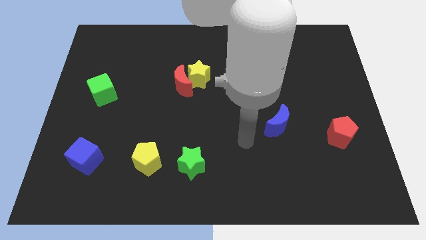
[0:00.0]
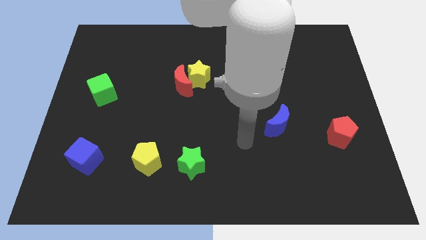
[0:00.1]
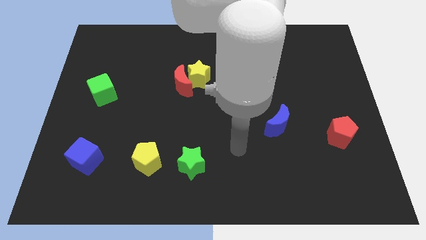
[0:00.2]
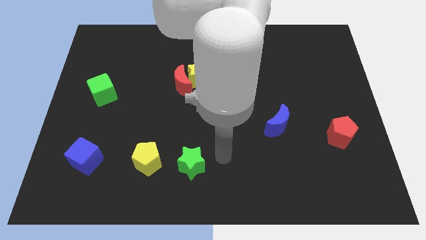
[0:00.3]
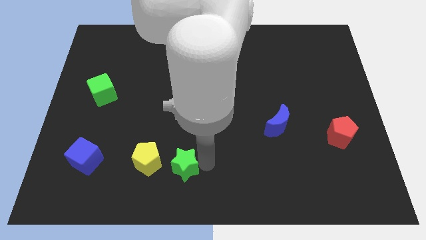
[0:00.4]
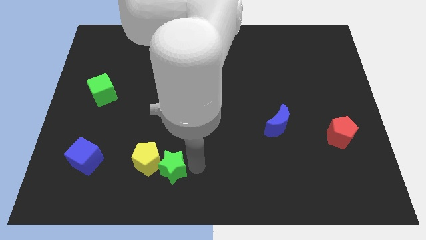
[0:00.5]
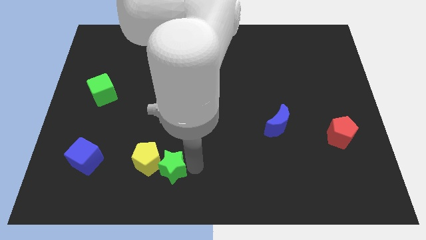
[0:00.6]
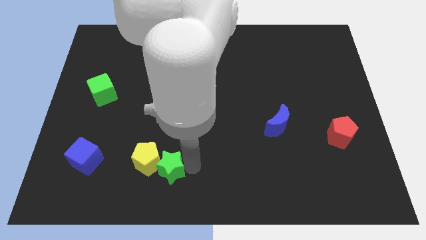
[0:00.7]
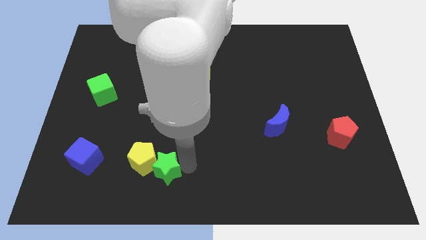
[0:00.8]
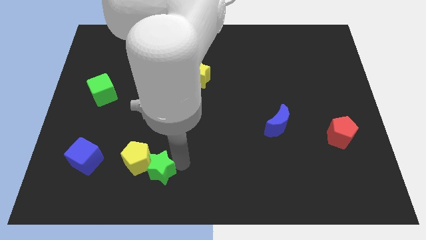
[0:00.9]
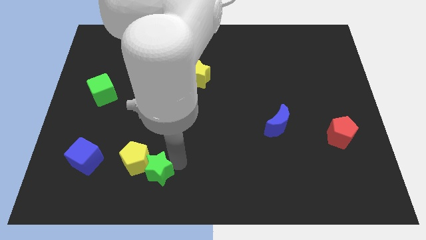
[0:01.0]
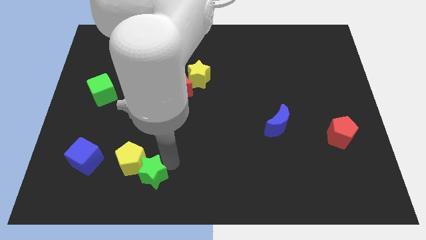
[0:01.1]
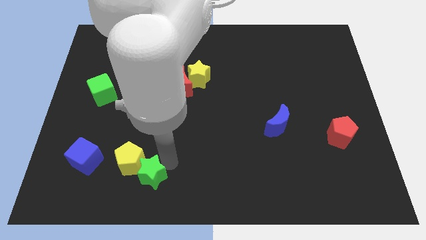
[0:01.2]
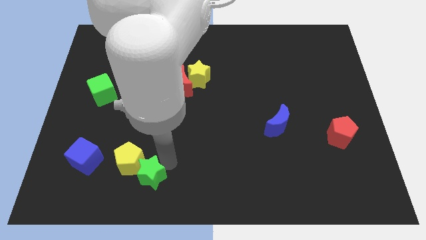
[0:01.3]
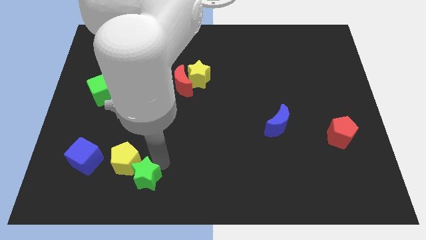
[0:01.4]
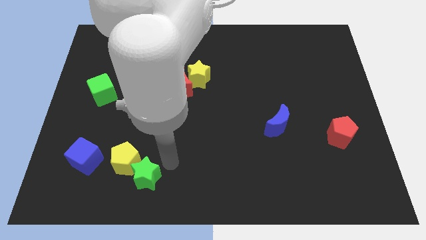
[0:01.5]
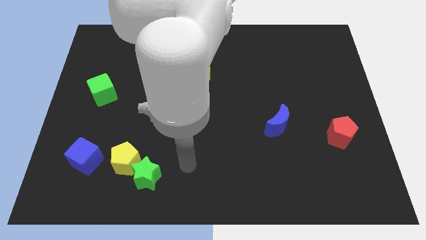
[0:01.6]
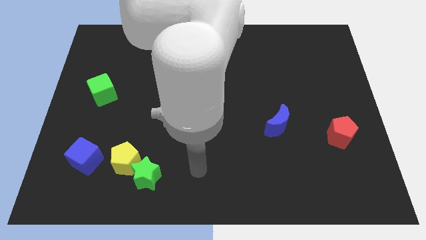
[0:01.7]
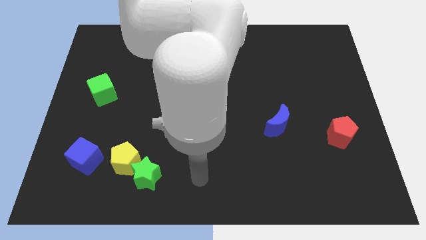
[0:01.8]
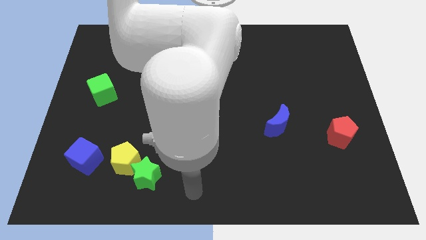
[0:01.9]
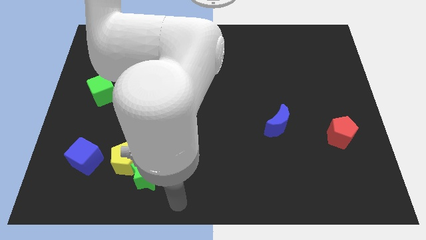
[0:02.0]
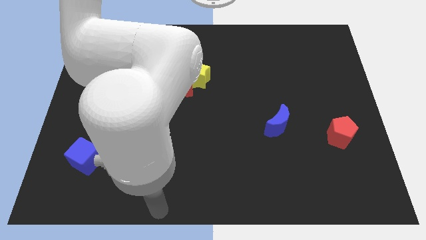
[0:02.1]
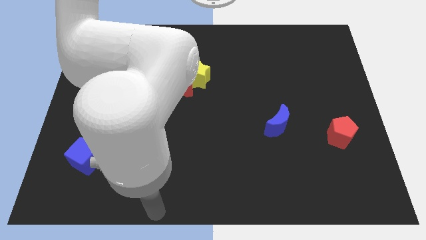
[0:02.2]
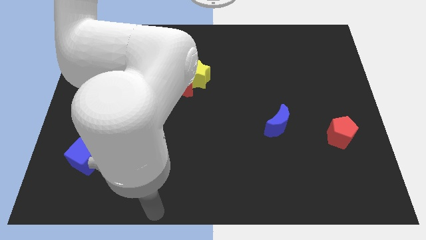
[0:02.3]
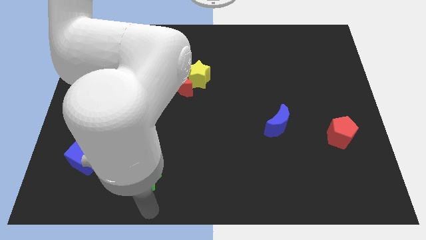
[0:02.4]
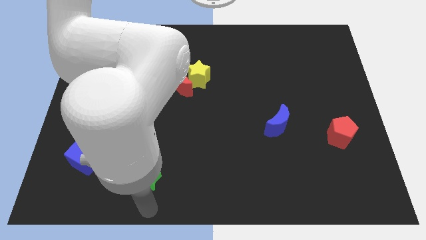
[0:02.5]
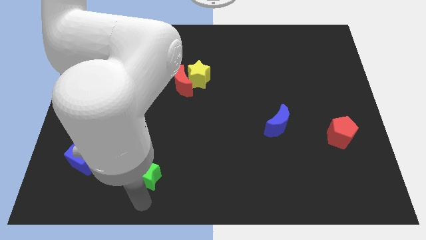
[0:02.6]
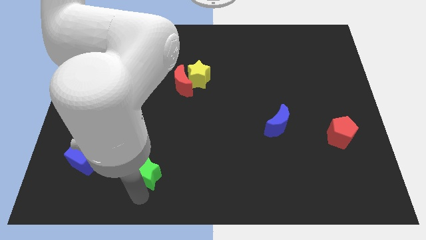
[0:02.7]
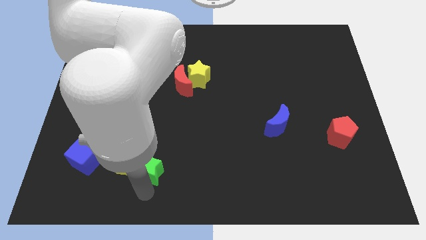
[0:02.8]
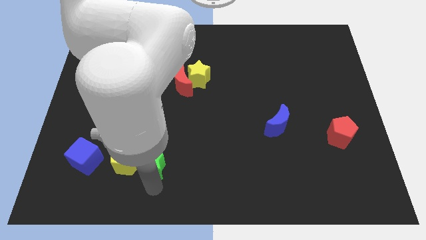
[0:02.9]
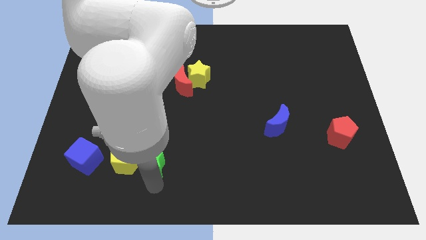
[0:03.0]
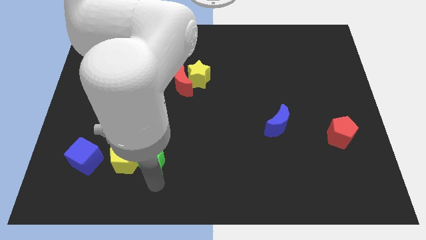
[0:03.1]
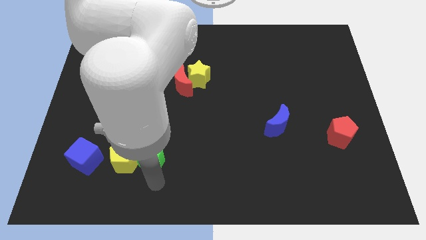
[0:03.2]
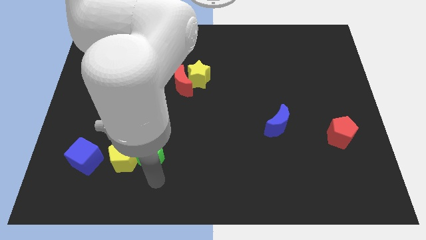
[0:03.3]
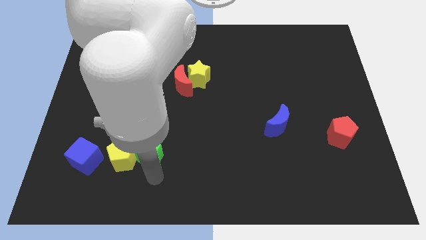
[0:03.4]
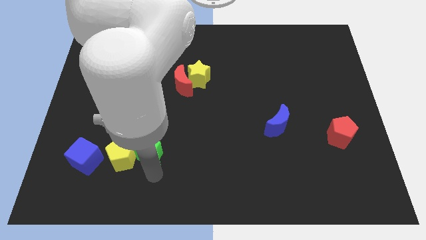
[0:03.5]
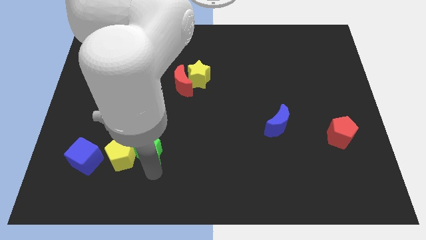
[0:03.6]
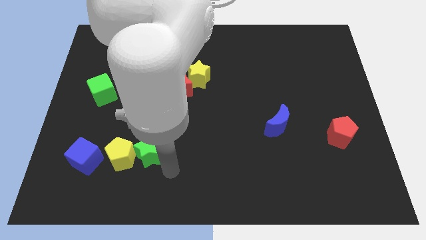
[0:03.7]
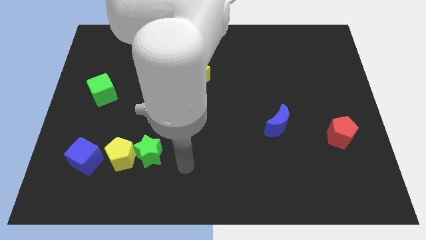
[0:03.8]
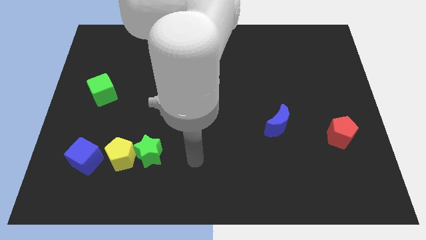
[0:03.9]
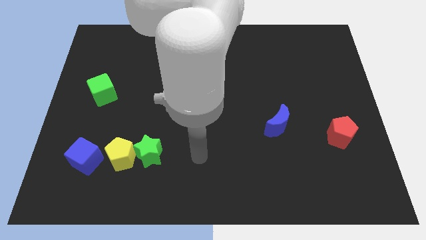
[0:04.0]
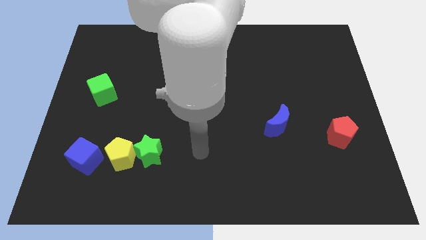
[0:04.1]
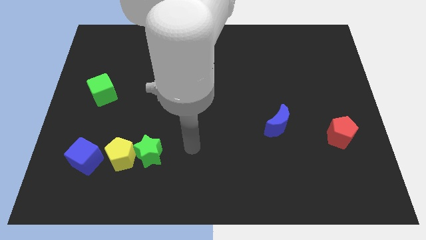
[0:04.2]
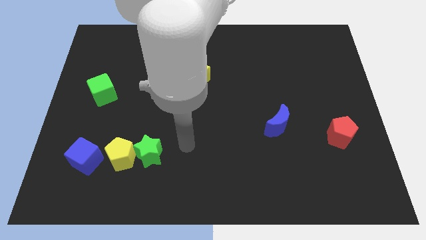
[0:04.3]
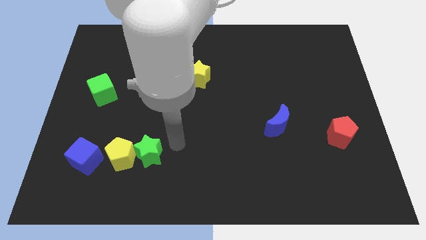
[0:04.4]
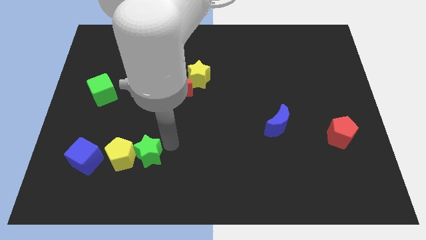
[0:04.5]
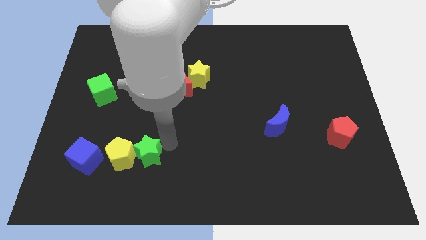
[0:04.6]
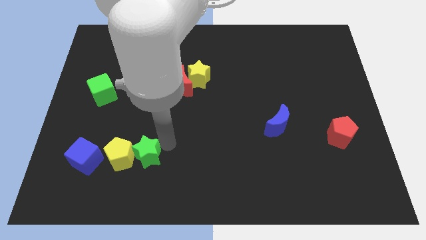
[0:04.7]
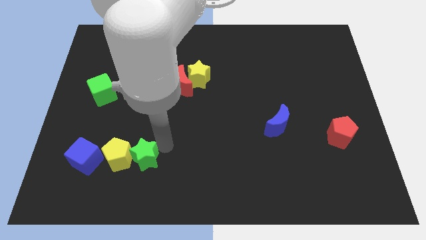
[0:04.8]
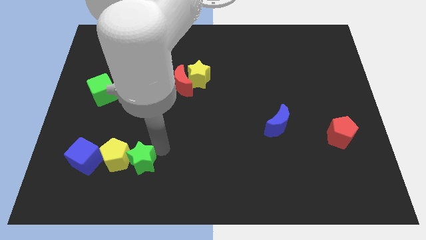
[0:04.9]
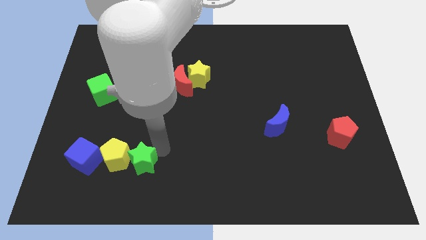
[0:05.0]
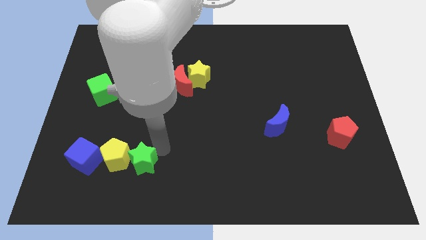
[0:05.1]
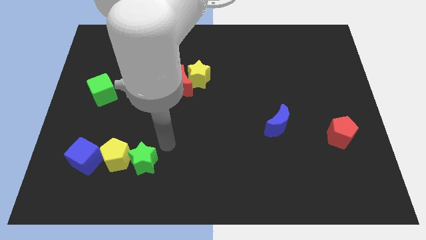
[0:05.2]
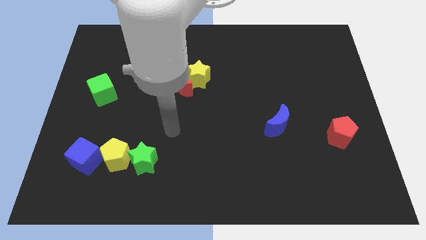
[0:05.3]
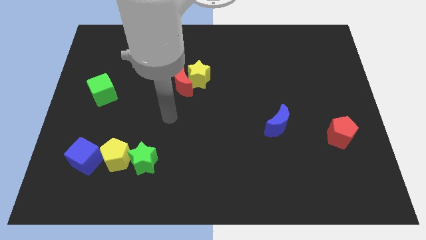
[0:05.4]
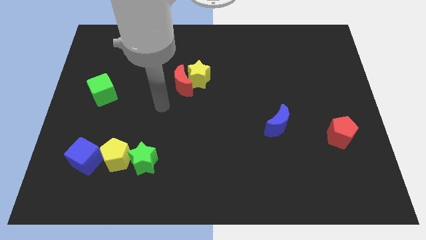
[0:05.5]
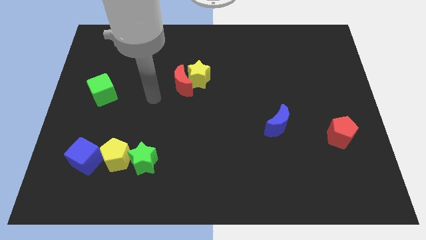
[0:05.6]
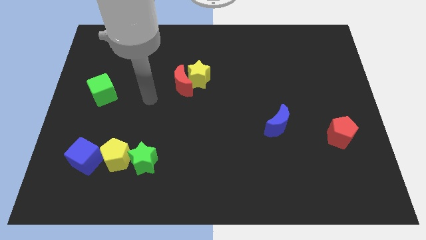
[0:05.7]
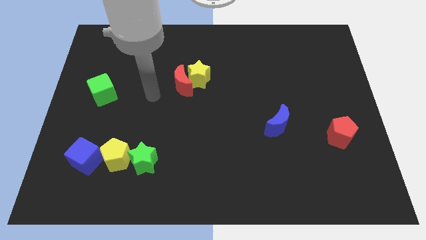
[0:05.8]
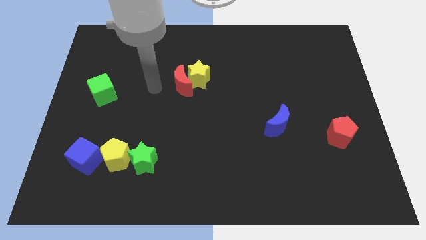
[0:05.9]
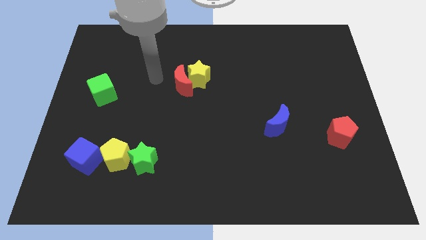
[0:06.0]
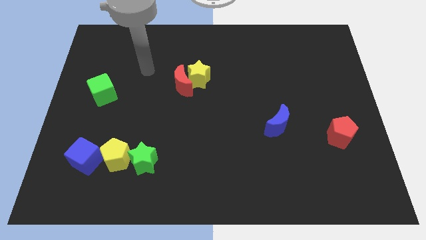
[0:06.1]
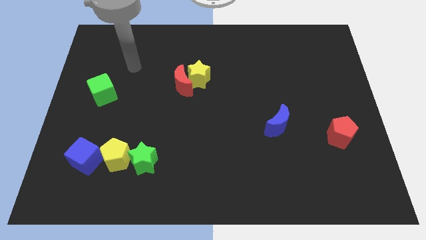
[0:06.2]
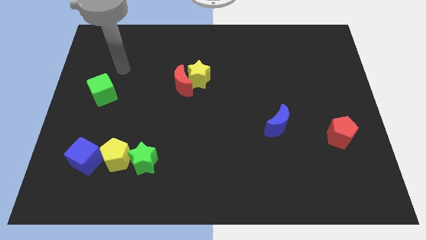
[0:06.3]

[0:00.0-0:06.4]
push the green star and yellow pentagon into the blue cube

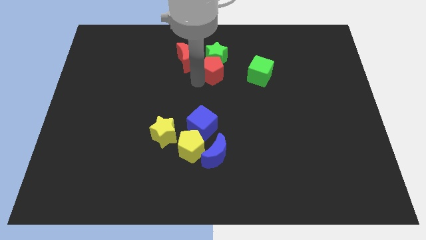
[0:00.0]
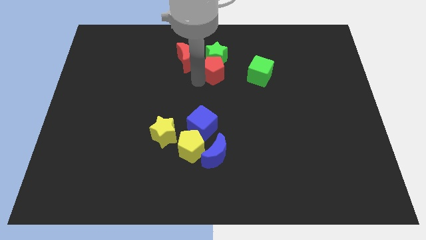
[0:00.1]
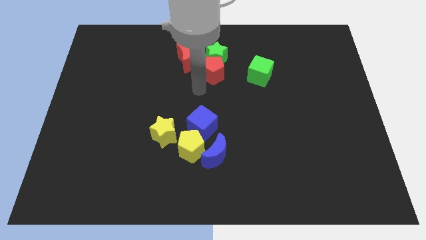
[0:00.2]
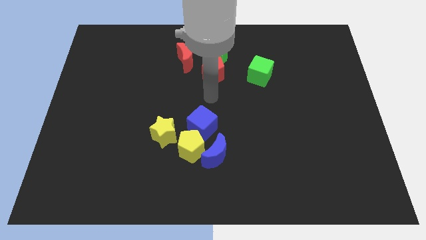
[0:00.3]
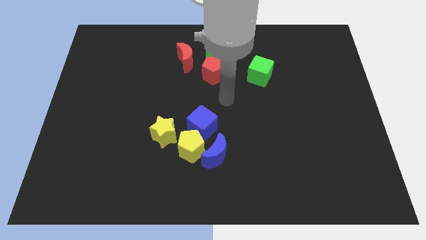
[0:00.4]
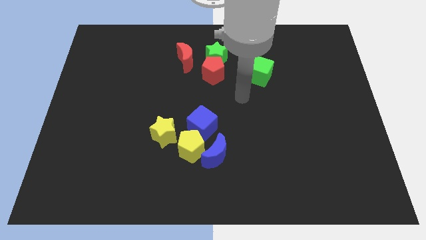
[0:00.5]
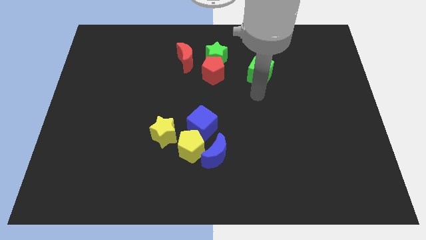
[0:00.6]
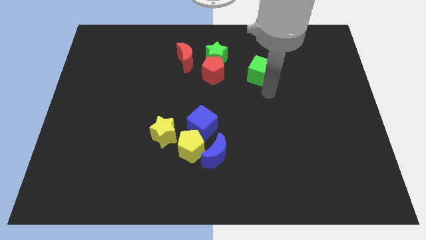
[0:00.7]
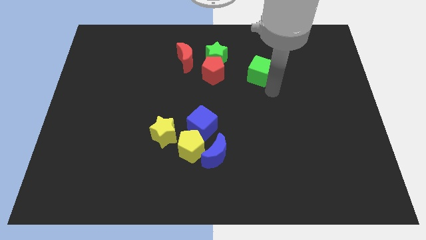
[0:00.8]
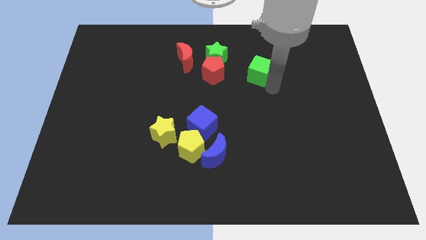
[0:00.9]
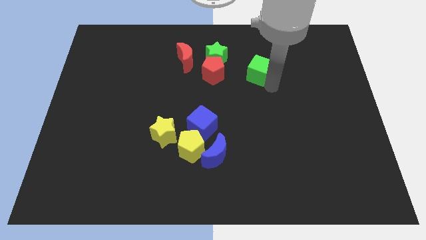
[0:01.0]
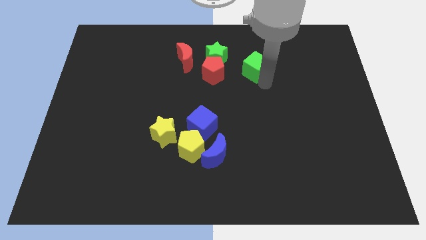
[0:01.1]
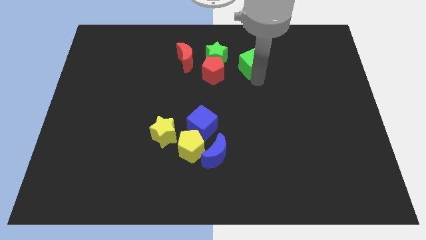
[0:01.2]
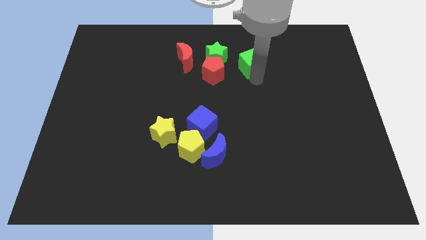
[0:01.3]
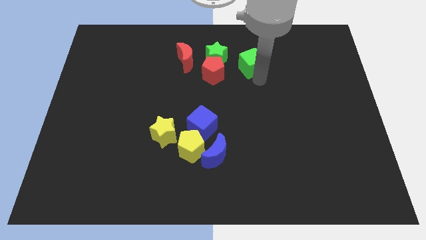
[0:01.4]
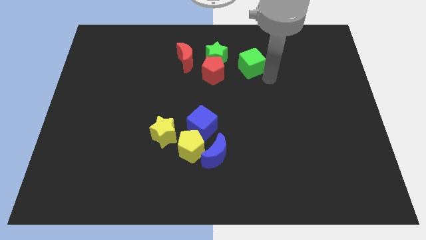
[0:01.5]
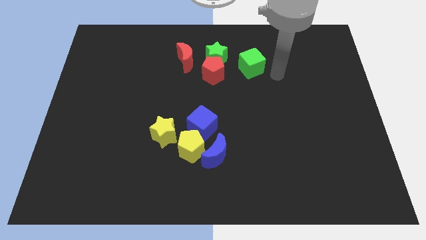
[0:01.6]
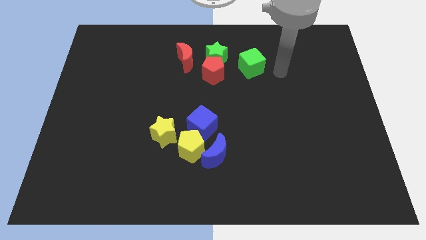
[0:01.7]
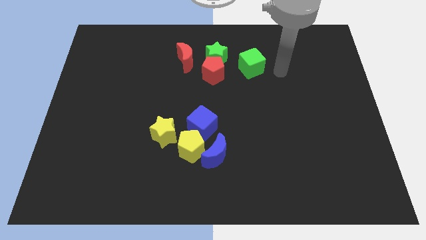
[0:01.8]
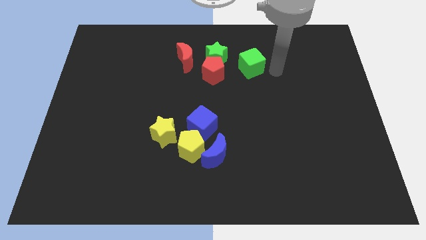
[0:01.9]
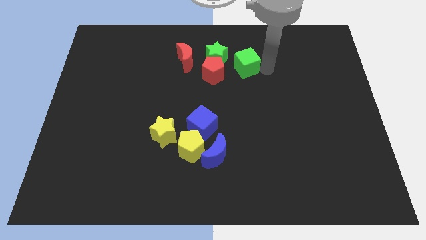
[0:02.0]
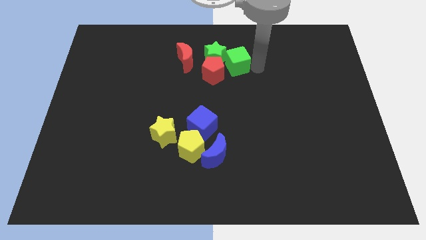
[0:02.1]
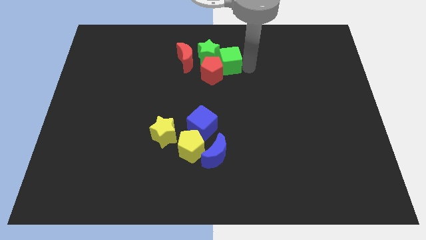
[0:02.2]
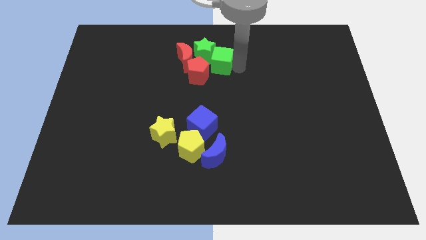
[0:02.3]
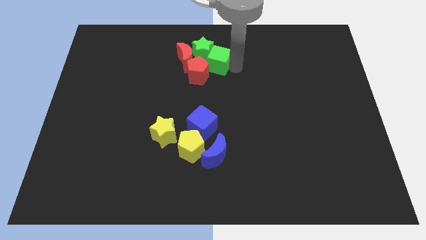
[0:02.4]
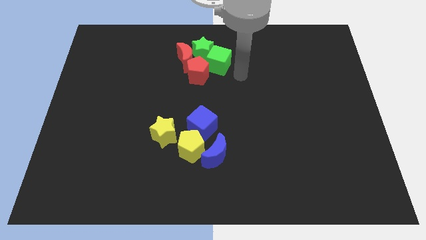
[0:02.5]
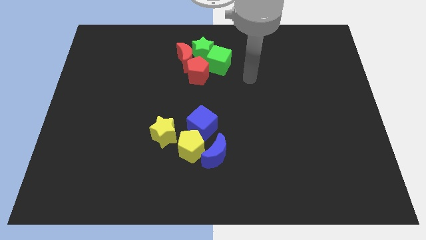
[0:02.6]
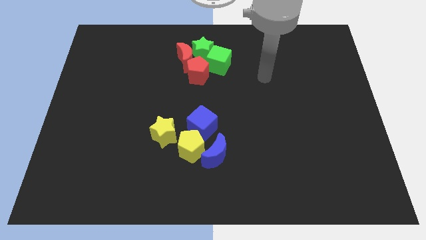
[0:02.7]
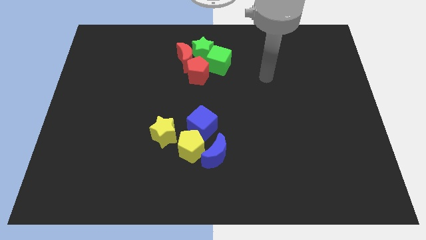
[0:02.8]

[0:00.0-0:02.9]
push the green cube to the right of the green star
